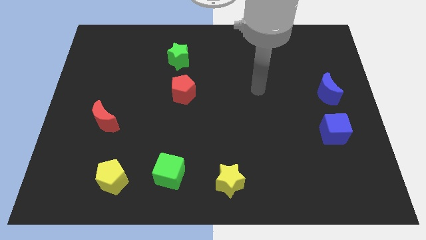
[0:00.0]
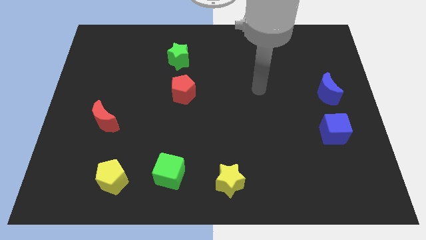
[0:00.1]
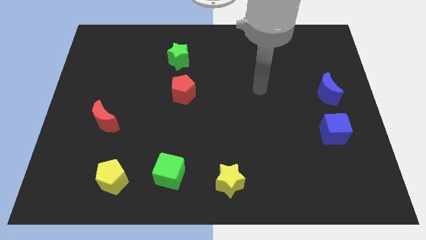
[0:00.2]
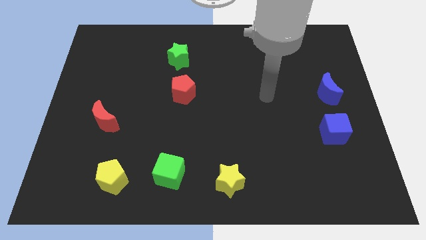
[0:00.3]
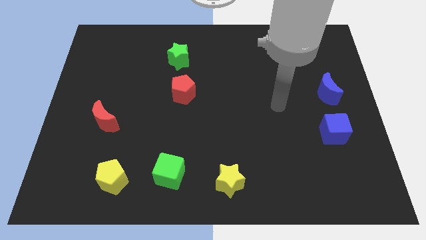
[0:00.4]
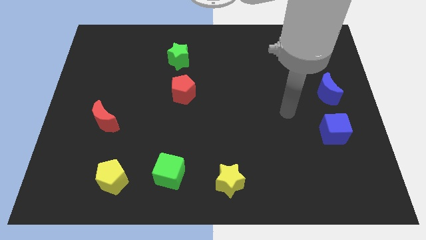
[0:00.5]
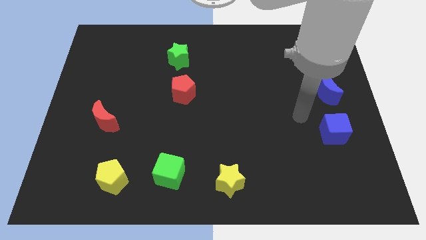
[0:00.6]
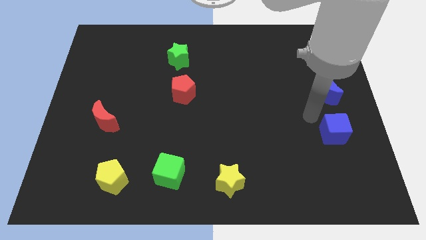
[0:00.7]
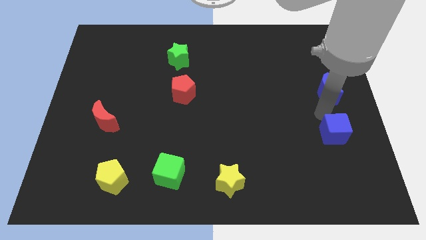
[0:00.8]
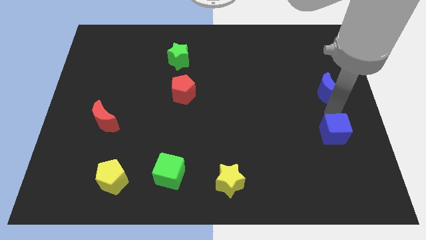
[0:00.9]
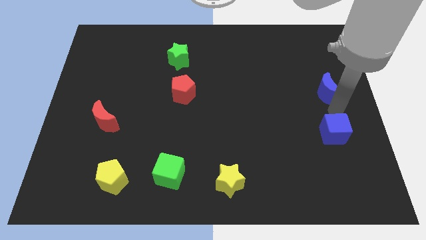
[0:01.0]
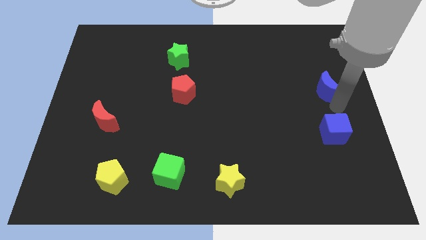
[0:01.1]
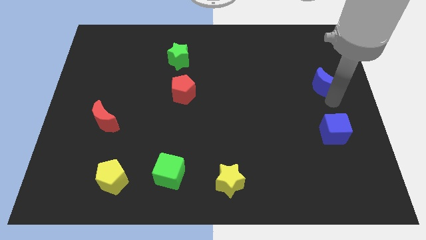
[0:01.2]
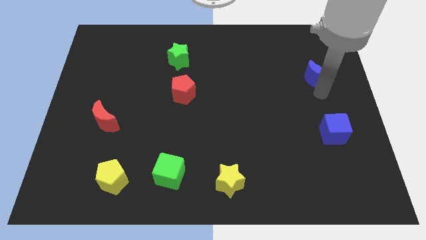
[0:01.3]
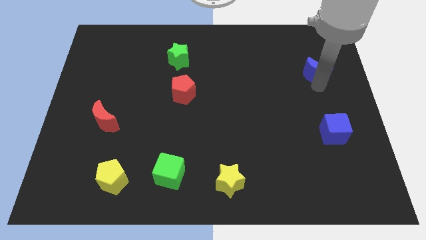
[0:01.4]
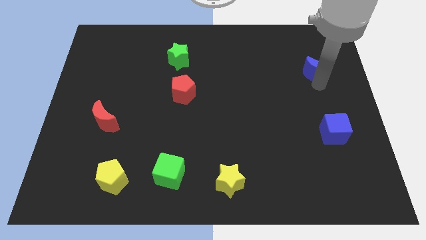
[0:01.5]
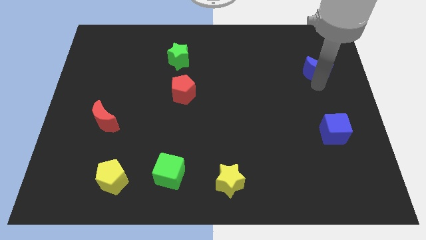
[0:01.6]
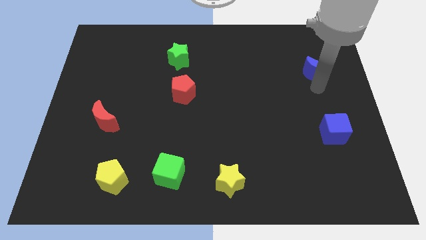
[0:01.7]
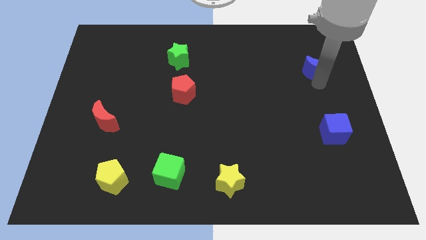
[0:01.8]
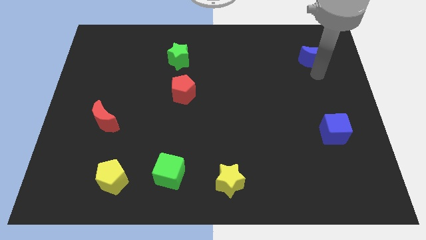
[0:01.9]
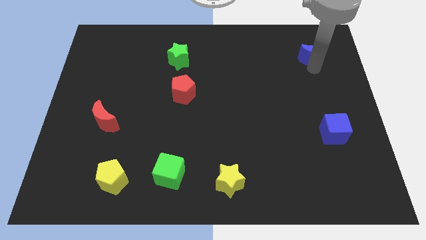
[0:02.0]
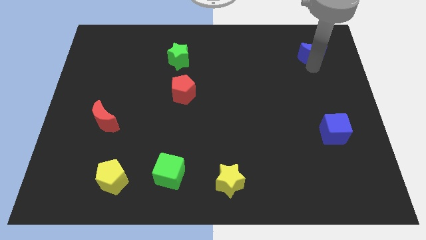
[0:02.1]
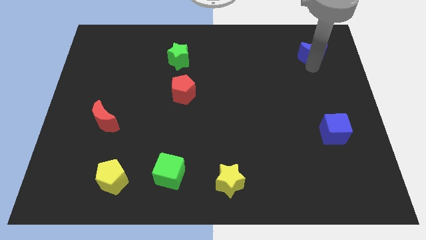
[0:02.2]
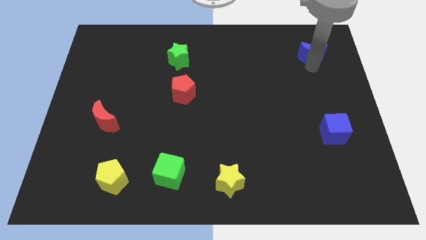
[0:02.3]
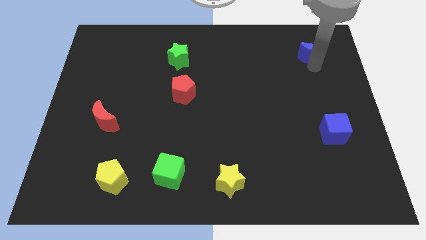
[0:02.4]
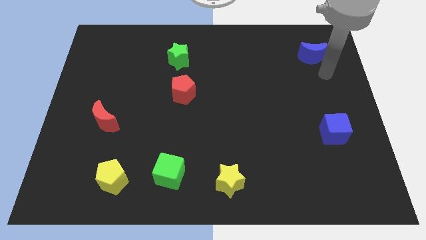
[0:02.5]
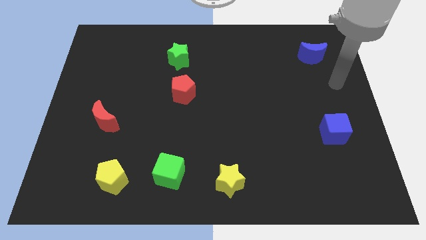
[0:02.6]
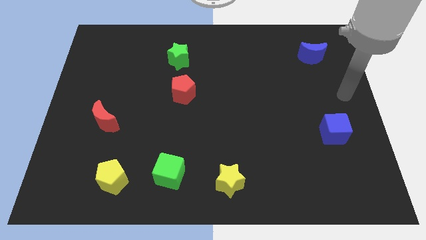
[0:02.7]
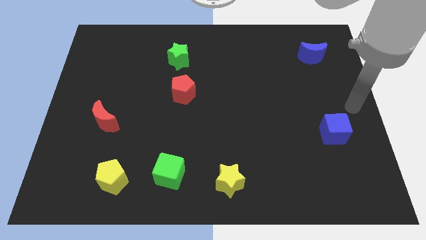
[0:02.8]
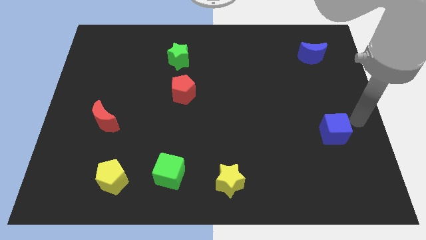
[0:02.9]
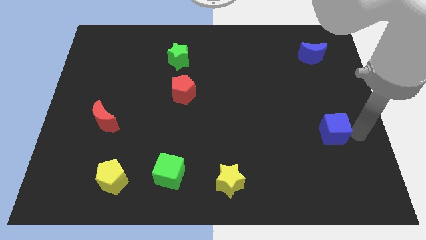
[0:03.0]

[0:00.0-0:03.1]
push the blue moon to the top right

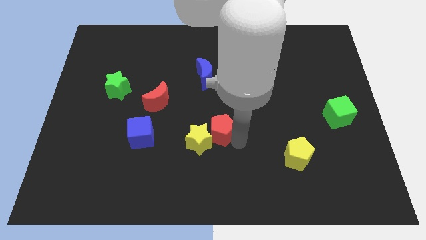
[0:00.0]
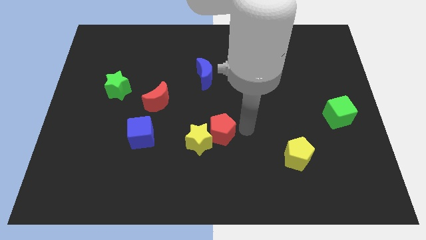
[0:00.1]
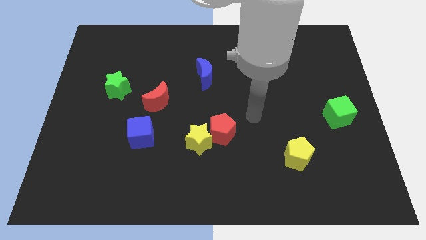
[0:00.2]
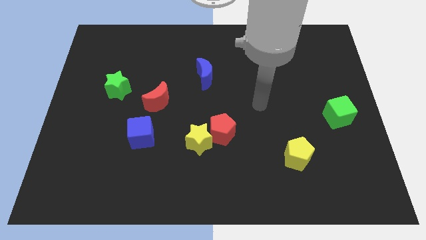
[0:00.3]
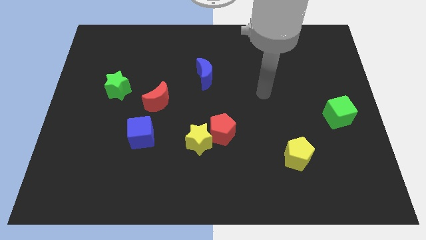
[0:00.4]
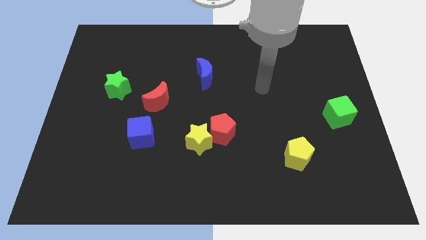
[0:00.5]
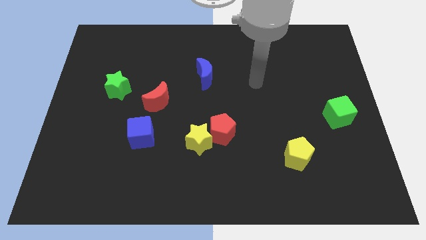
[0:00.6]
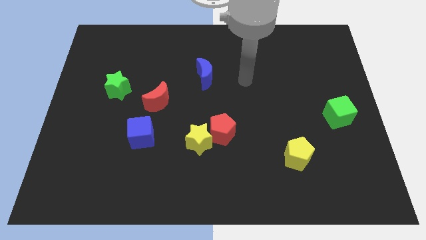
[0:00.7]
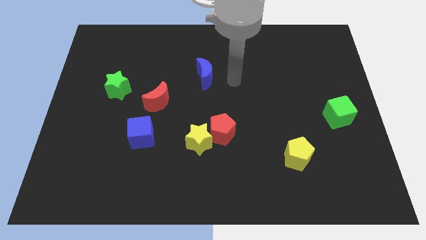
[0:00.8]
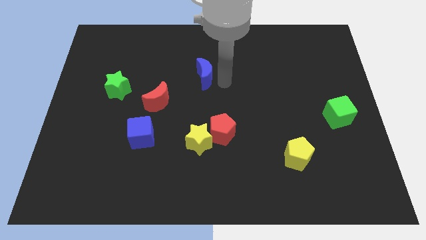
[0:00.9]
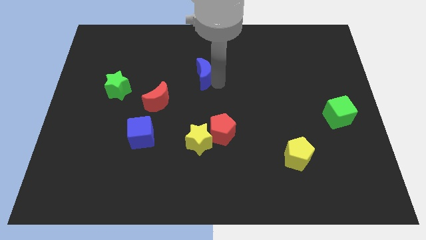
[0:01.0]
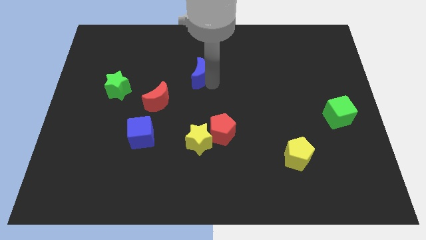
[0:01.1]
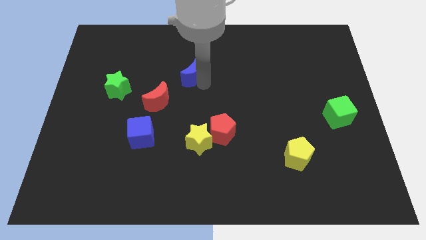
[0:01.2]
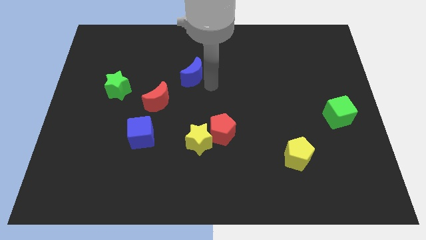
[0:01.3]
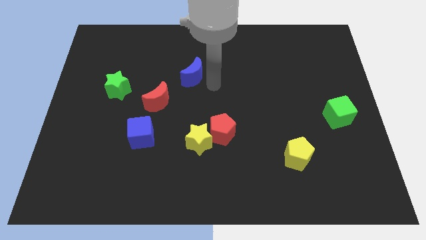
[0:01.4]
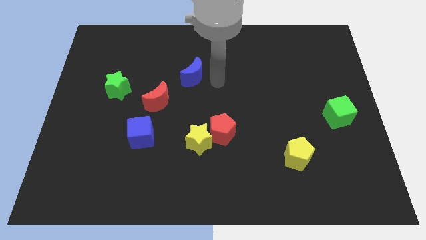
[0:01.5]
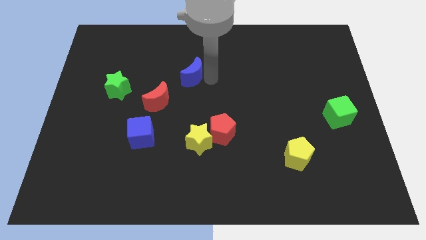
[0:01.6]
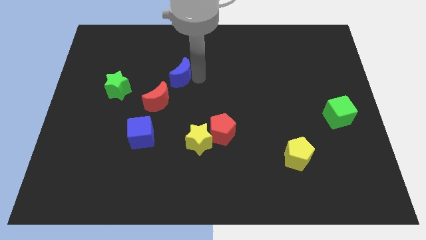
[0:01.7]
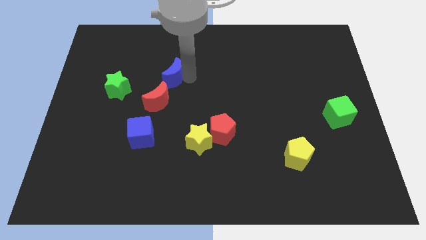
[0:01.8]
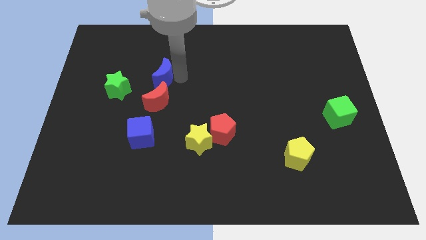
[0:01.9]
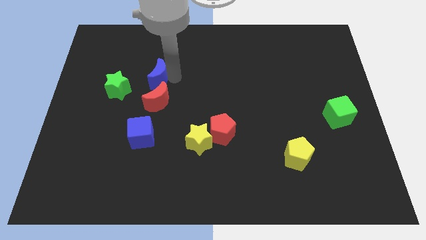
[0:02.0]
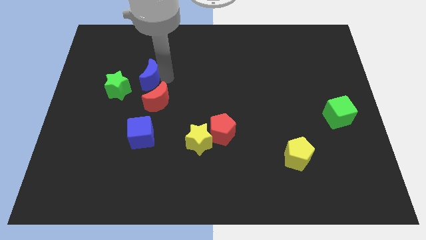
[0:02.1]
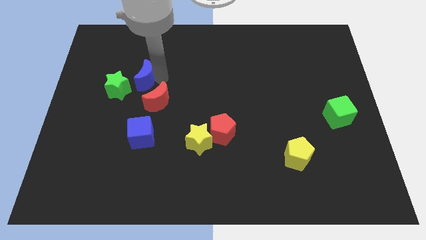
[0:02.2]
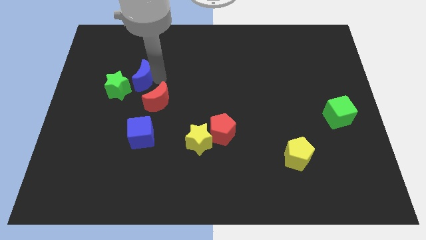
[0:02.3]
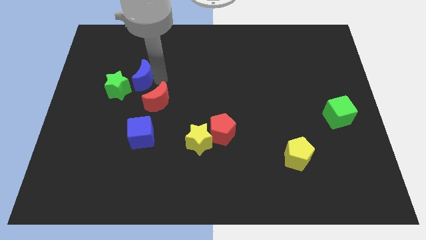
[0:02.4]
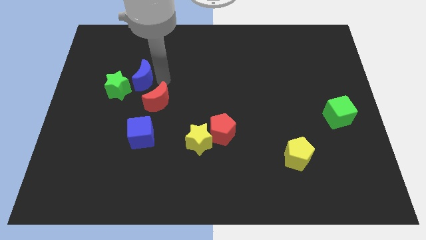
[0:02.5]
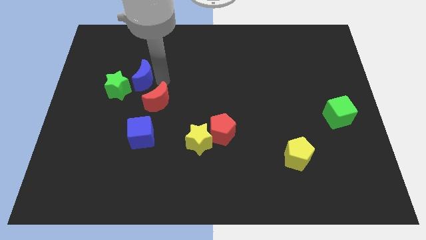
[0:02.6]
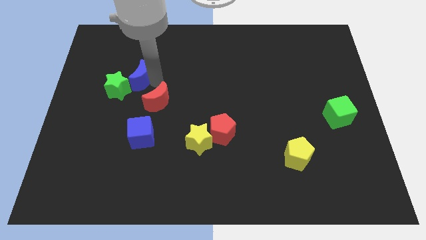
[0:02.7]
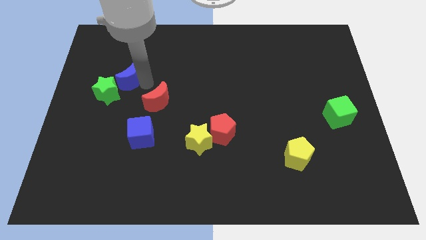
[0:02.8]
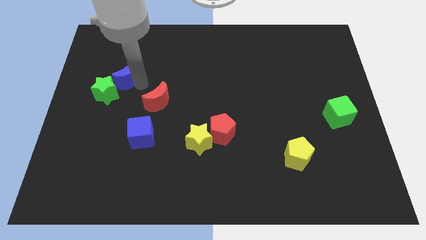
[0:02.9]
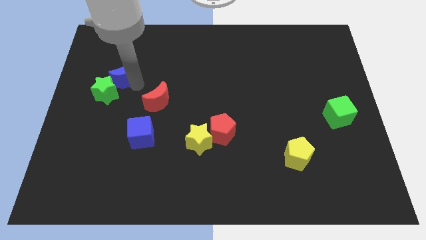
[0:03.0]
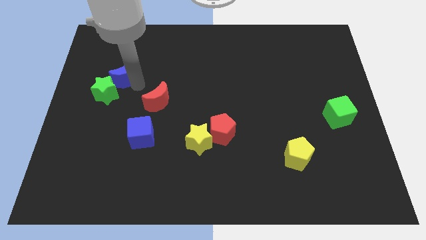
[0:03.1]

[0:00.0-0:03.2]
push the blue moon to the left side of the board

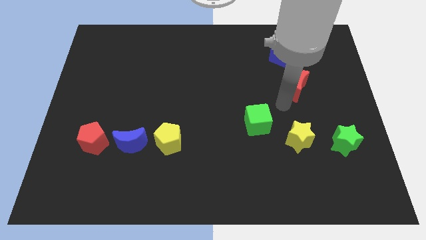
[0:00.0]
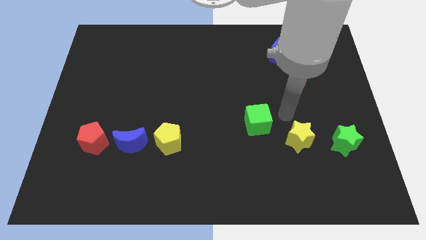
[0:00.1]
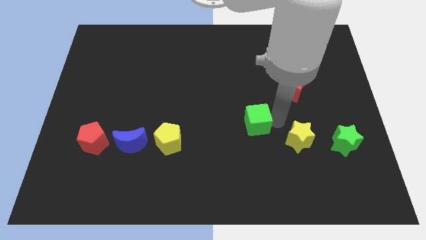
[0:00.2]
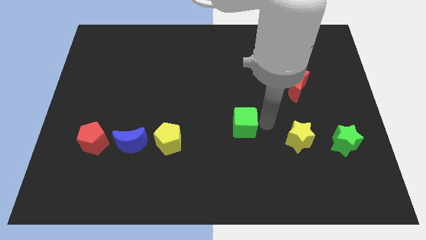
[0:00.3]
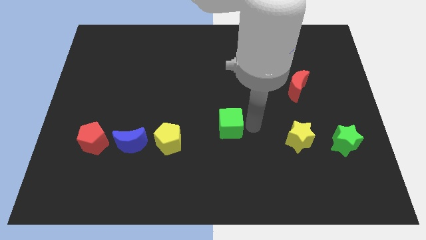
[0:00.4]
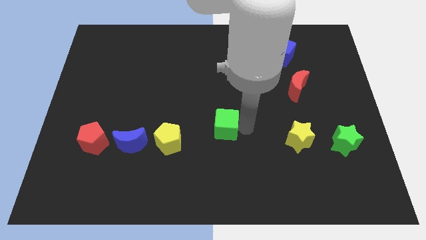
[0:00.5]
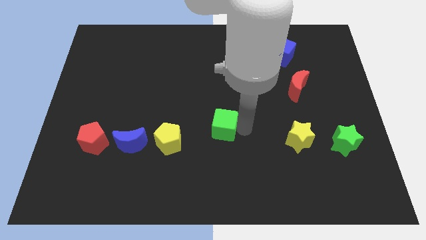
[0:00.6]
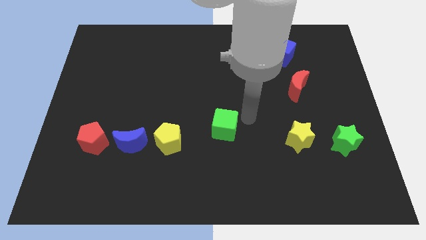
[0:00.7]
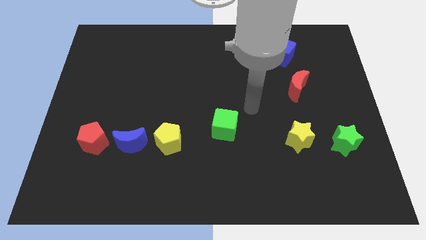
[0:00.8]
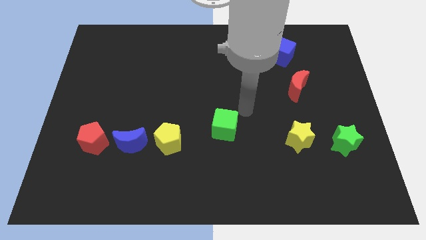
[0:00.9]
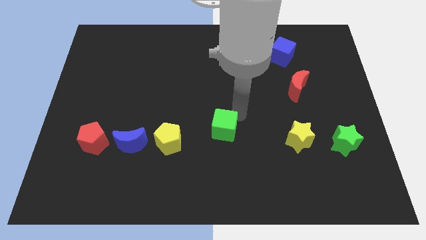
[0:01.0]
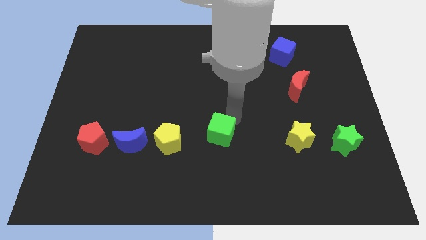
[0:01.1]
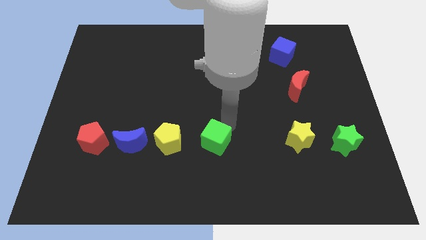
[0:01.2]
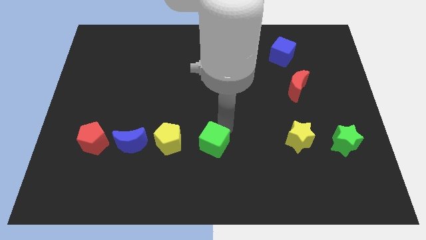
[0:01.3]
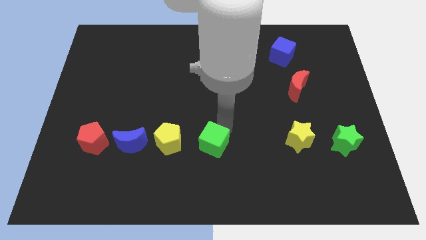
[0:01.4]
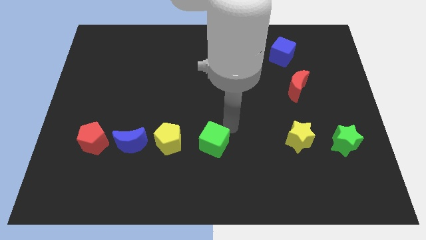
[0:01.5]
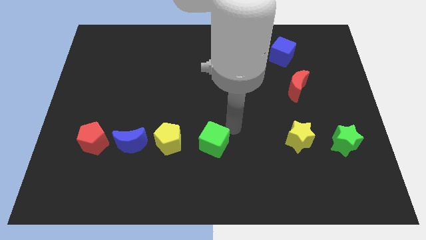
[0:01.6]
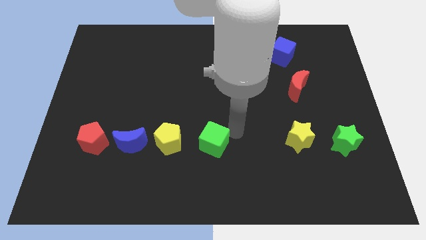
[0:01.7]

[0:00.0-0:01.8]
push the green cube to the right side of the yellow pentagon

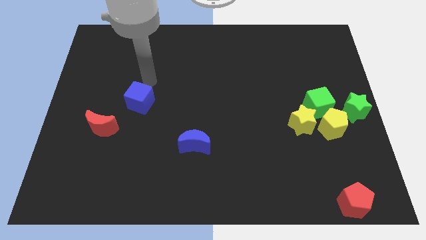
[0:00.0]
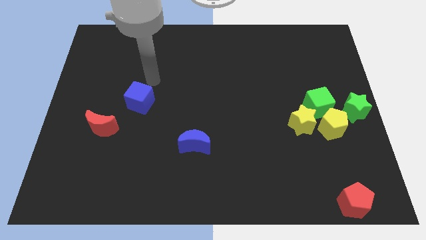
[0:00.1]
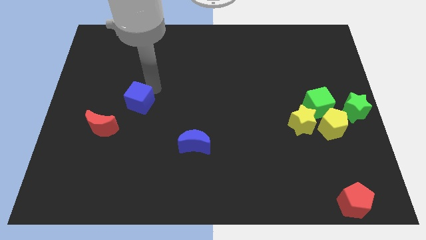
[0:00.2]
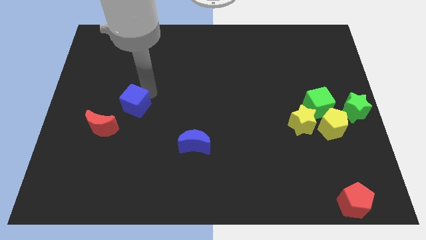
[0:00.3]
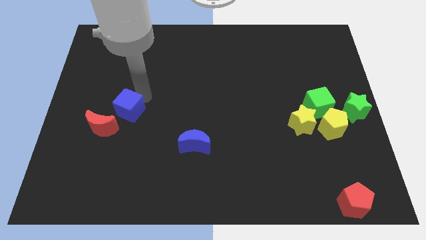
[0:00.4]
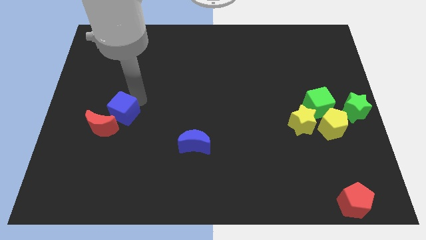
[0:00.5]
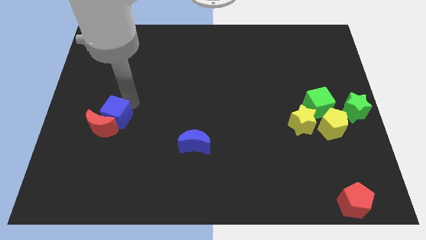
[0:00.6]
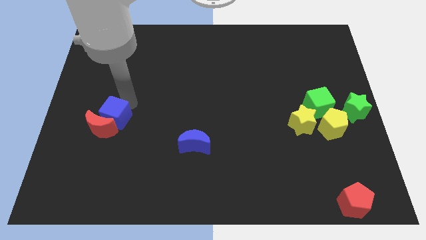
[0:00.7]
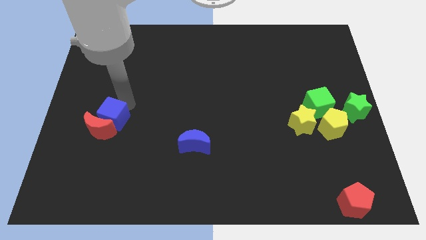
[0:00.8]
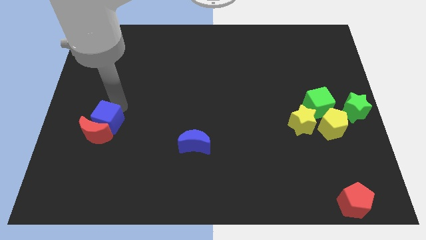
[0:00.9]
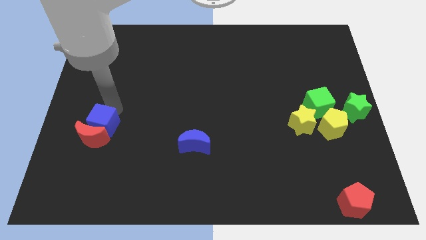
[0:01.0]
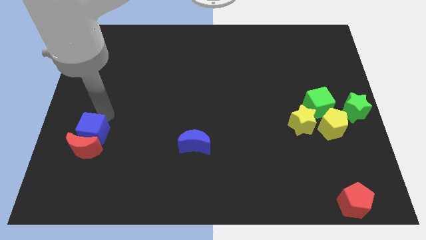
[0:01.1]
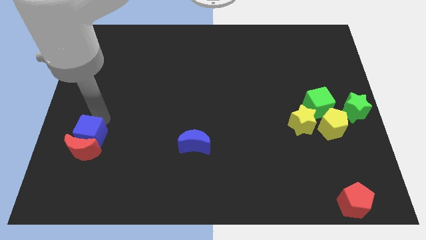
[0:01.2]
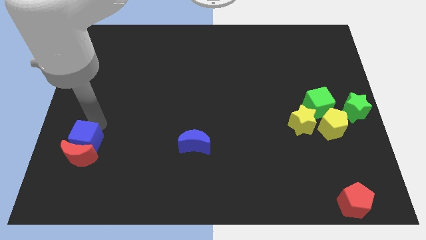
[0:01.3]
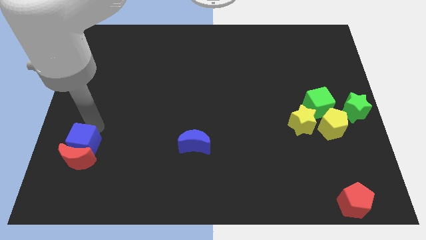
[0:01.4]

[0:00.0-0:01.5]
push blue cube into red crescent
